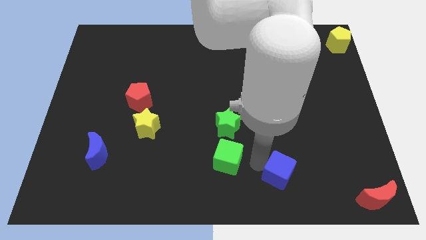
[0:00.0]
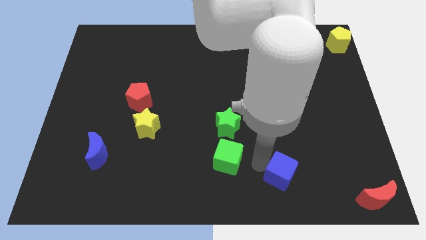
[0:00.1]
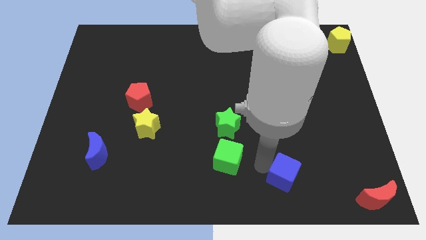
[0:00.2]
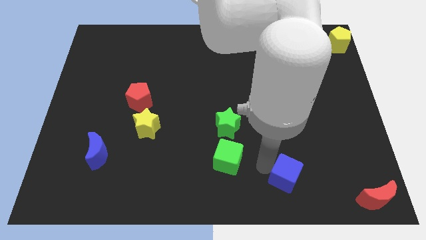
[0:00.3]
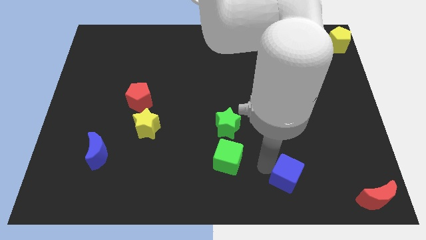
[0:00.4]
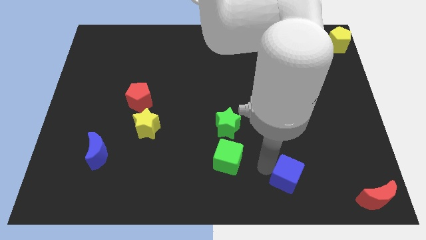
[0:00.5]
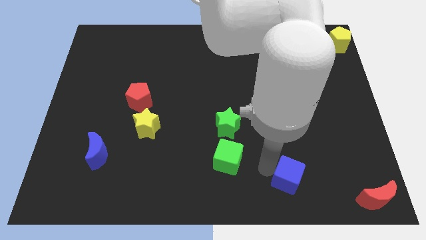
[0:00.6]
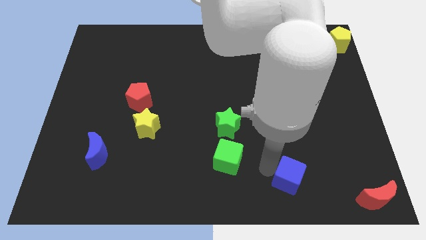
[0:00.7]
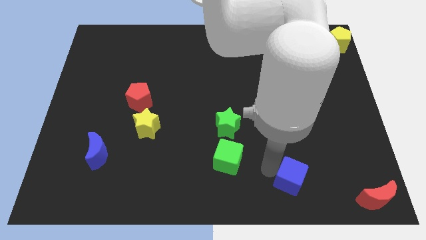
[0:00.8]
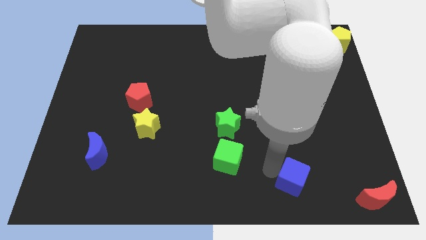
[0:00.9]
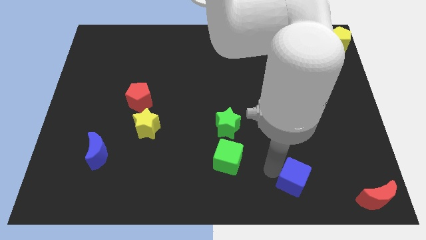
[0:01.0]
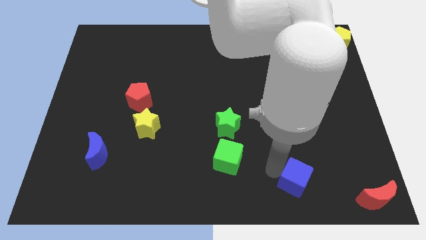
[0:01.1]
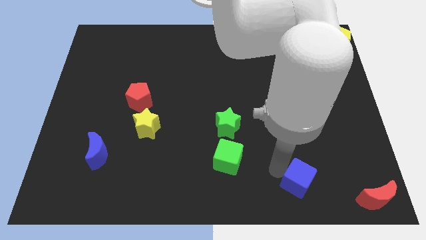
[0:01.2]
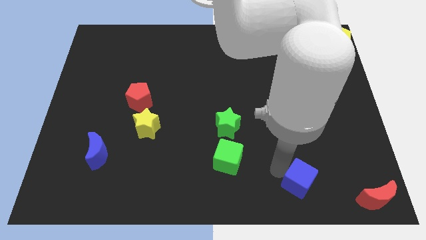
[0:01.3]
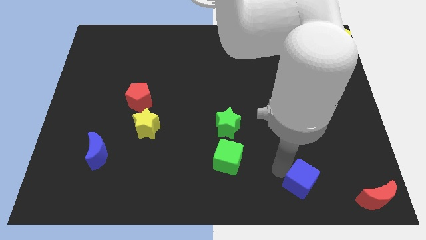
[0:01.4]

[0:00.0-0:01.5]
place blue cube in between red crescent and green cube

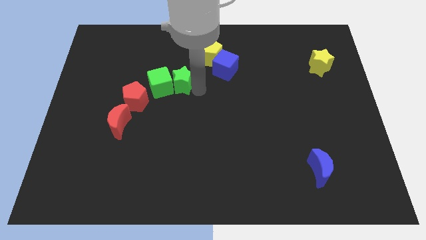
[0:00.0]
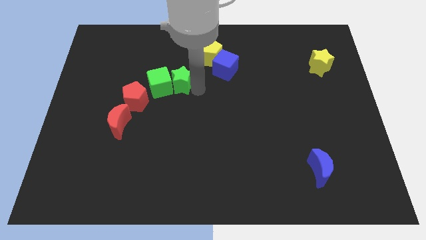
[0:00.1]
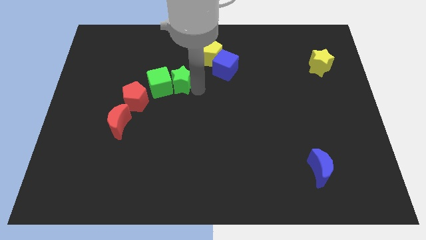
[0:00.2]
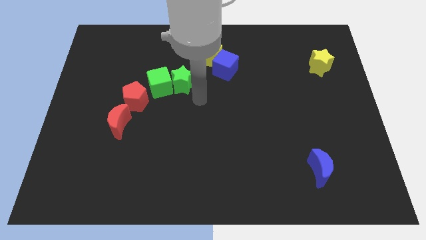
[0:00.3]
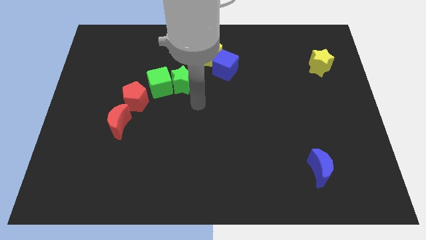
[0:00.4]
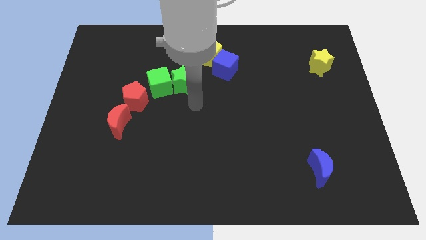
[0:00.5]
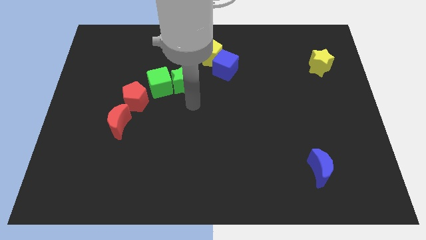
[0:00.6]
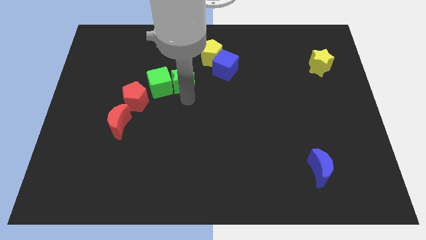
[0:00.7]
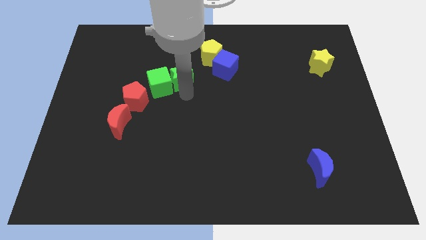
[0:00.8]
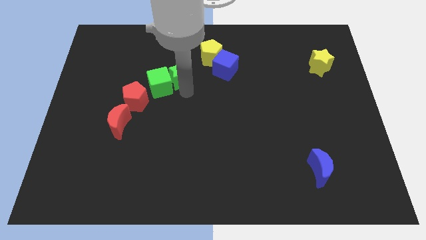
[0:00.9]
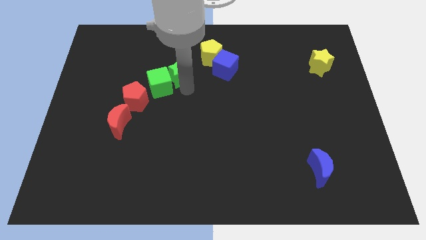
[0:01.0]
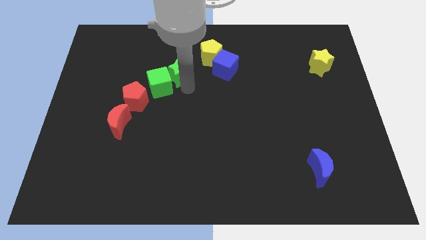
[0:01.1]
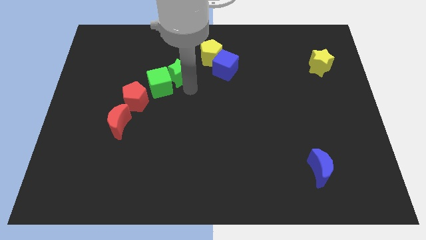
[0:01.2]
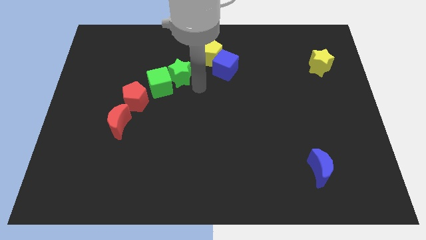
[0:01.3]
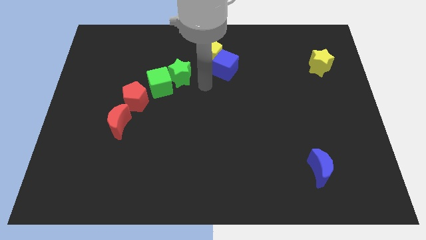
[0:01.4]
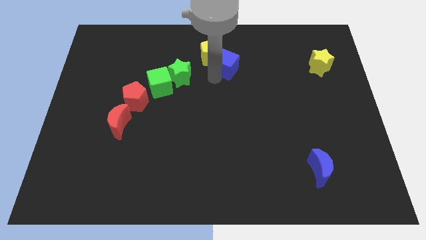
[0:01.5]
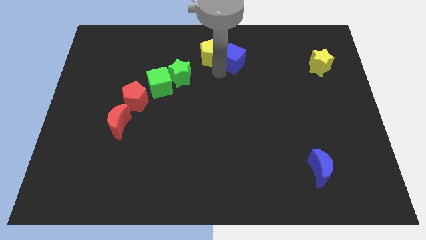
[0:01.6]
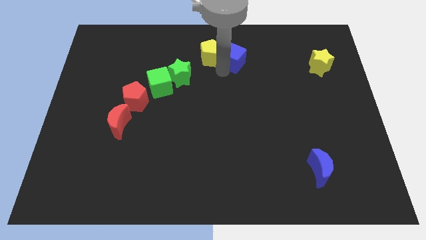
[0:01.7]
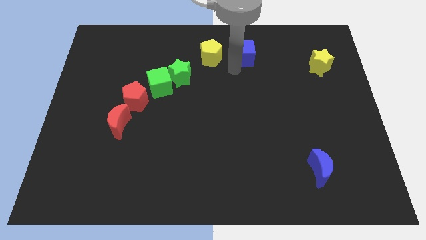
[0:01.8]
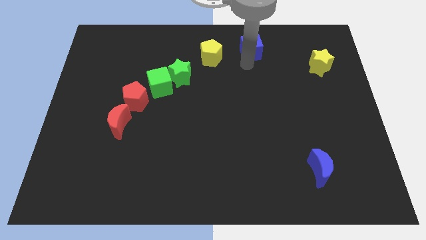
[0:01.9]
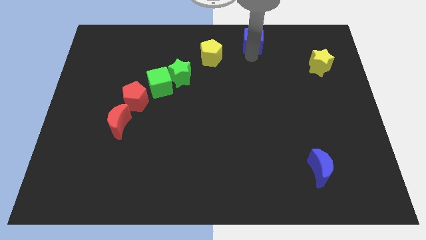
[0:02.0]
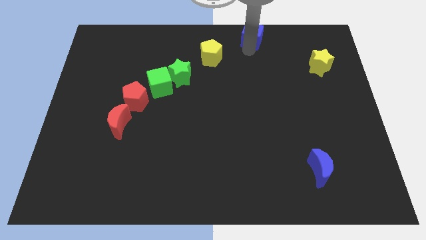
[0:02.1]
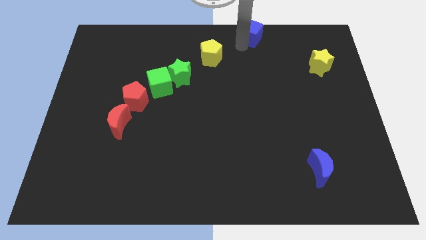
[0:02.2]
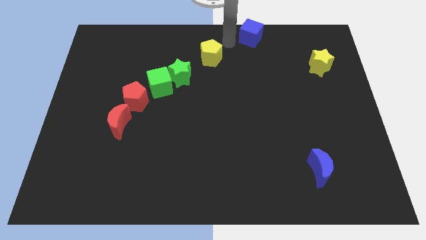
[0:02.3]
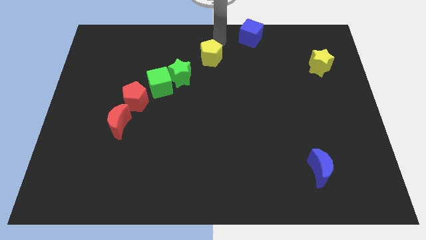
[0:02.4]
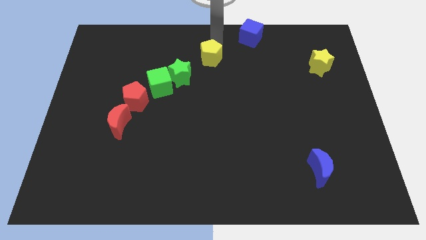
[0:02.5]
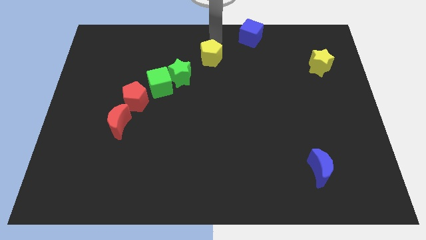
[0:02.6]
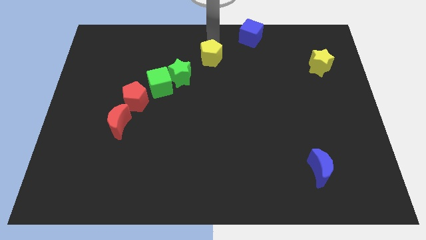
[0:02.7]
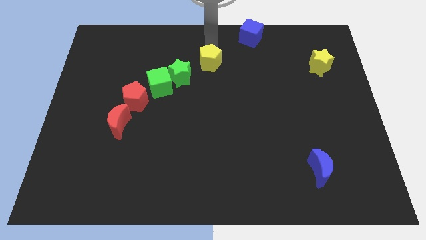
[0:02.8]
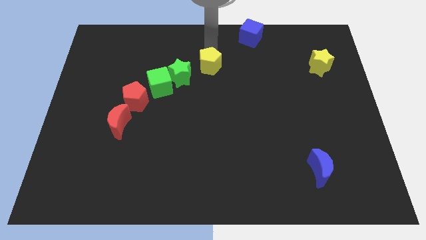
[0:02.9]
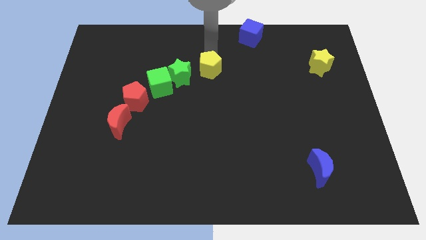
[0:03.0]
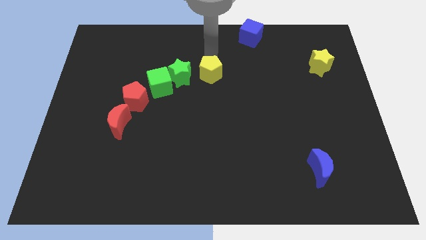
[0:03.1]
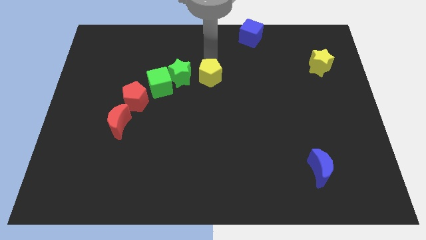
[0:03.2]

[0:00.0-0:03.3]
slide the yellow pentagon to the right of green star

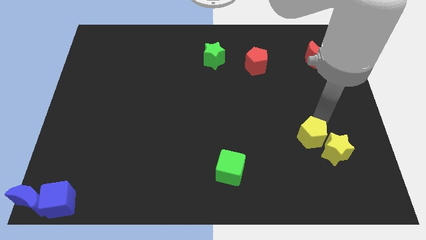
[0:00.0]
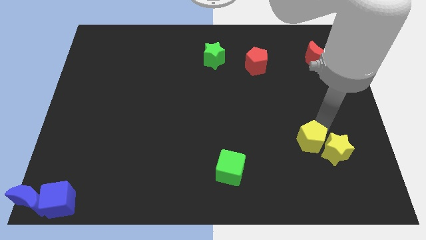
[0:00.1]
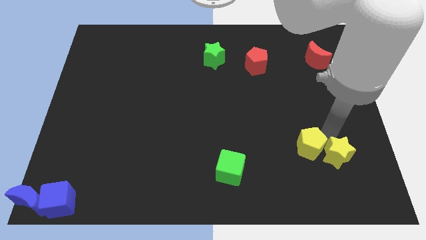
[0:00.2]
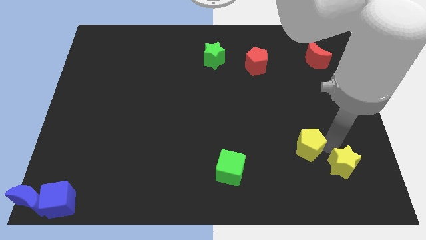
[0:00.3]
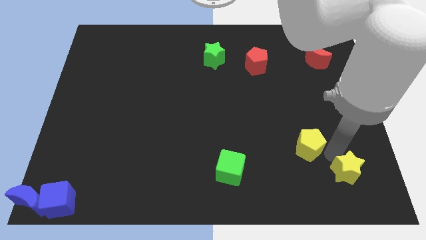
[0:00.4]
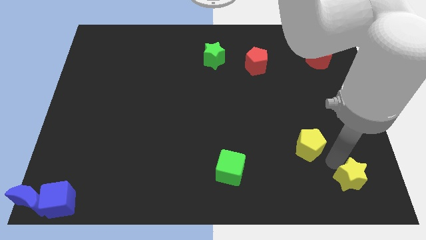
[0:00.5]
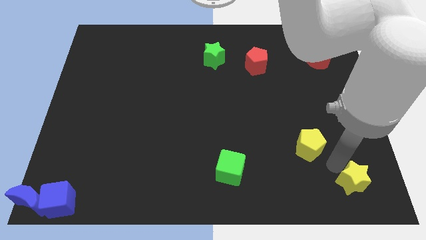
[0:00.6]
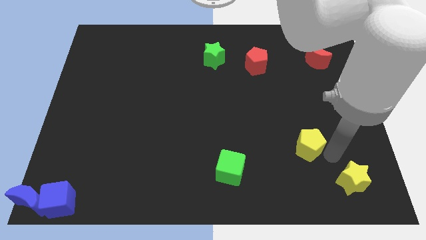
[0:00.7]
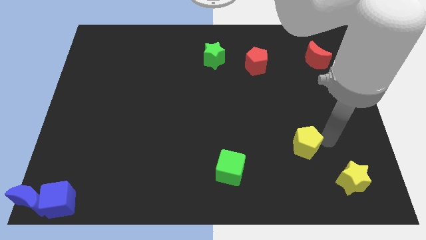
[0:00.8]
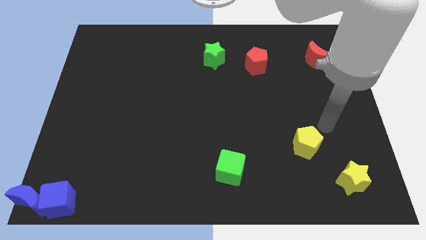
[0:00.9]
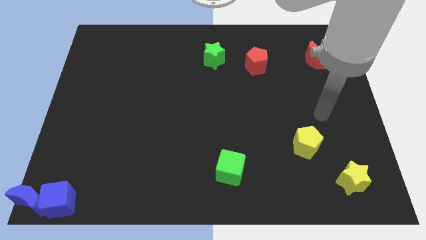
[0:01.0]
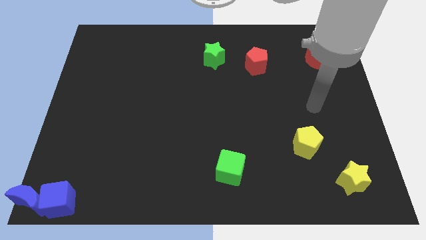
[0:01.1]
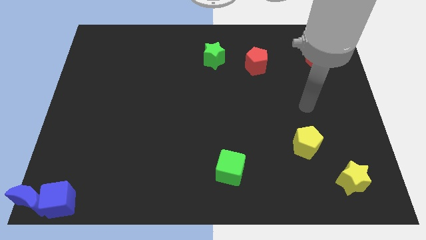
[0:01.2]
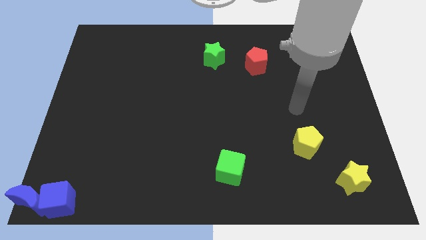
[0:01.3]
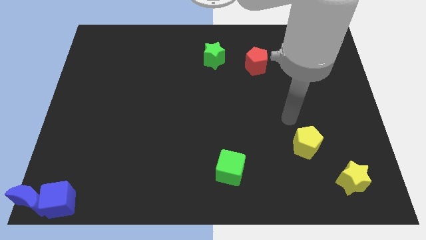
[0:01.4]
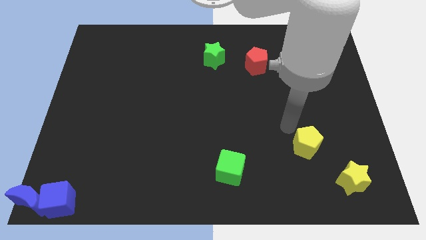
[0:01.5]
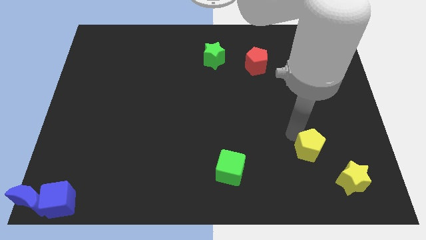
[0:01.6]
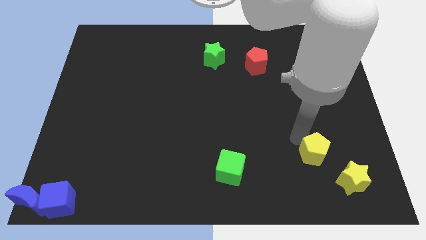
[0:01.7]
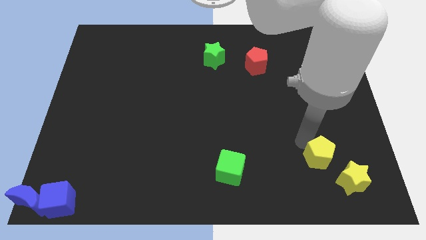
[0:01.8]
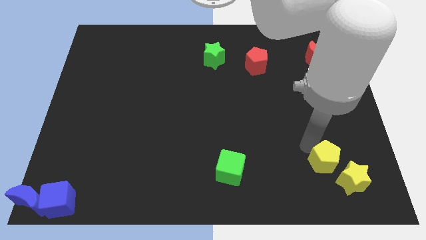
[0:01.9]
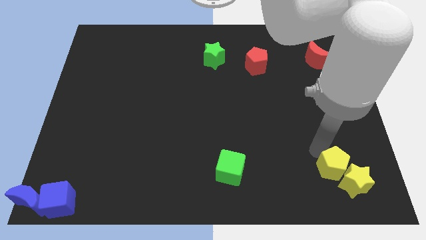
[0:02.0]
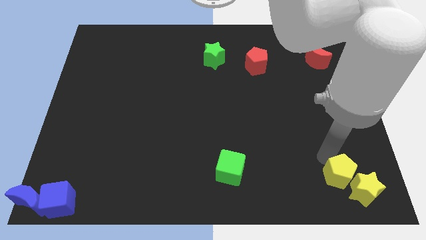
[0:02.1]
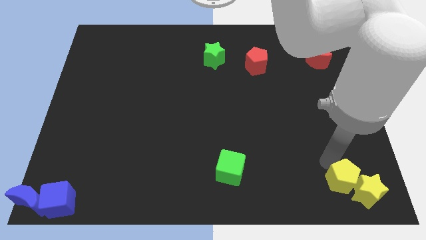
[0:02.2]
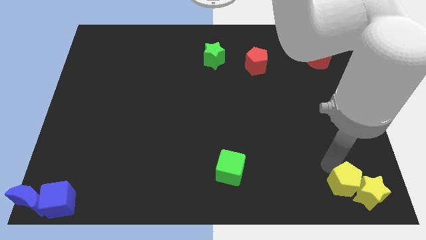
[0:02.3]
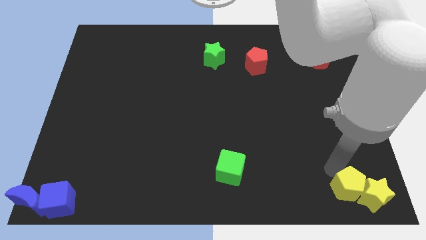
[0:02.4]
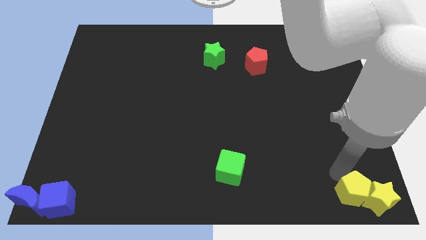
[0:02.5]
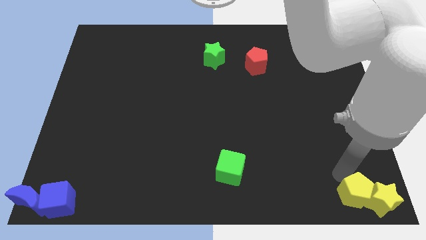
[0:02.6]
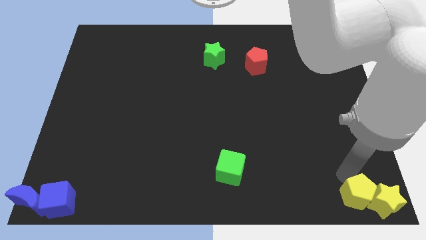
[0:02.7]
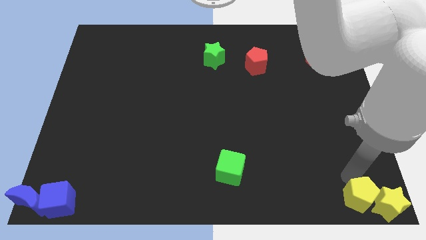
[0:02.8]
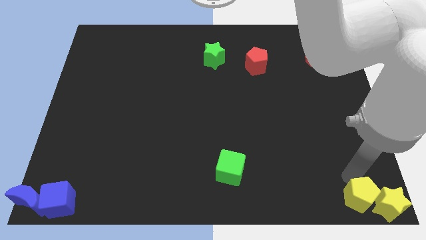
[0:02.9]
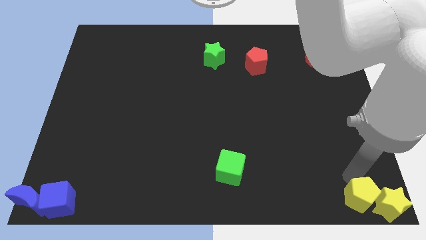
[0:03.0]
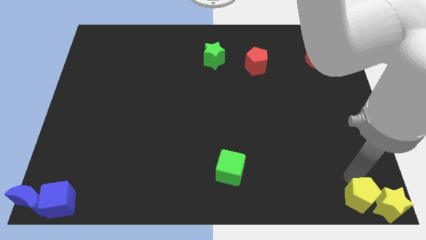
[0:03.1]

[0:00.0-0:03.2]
push the yellow blocks to the bottom right corner of the board

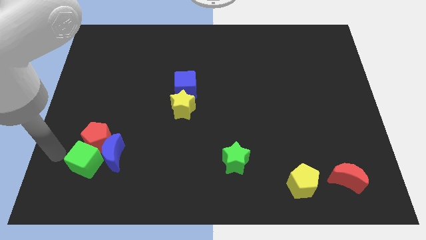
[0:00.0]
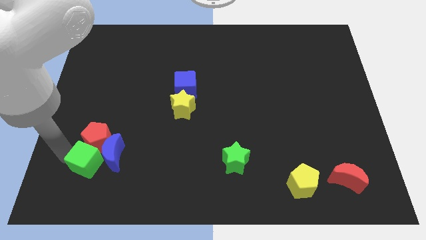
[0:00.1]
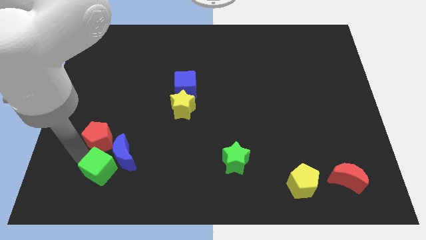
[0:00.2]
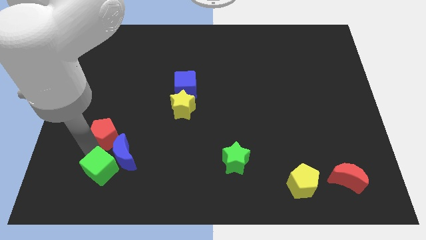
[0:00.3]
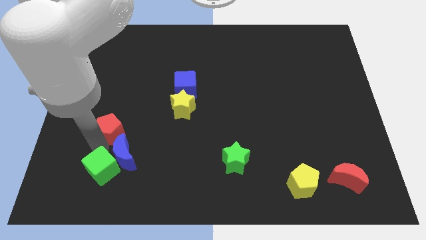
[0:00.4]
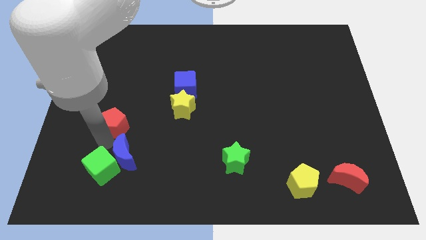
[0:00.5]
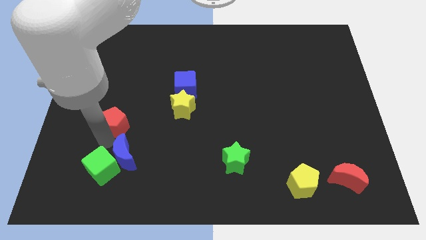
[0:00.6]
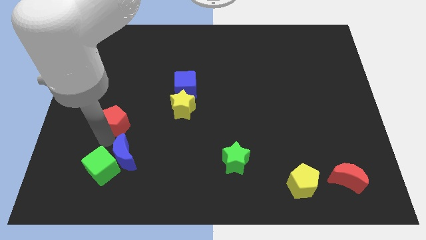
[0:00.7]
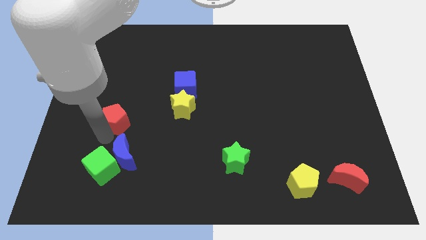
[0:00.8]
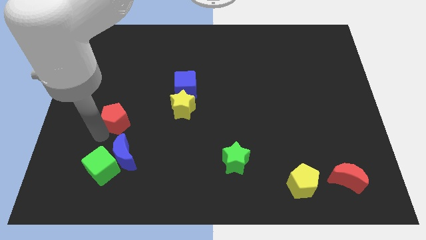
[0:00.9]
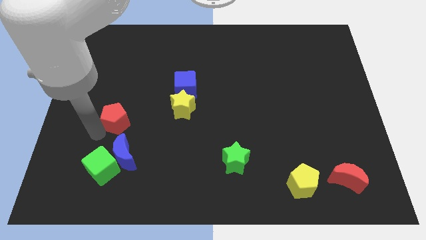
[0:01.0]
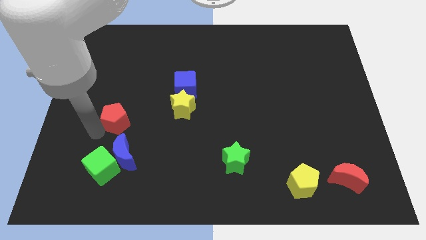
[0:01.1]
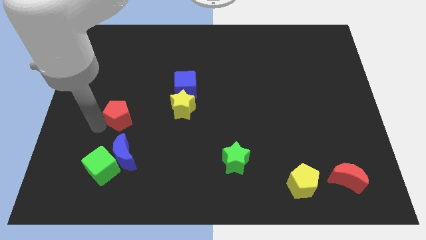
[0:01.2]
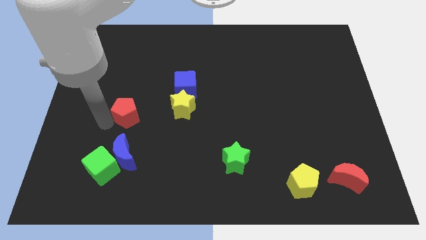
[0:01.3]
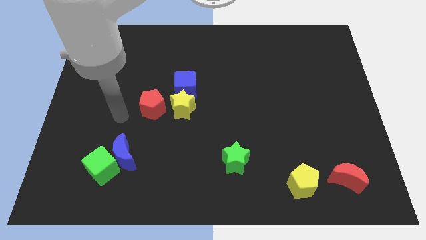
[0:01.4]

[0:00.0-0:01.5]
separate the green cube and red pentagon
